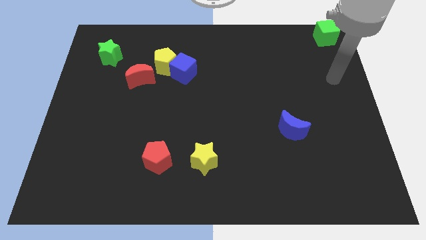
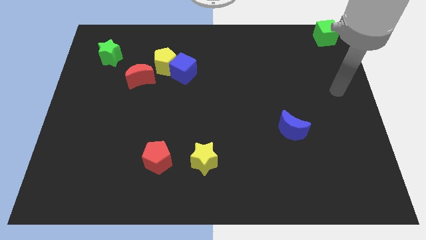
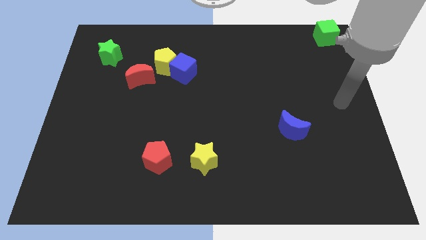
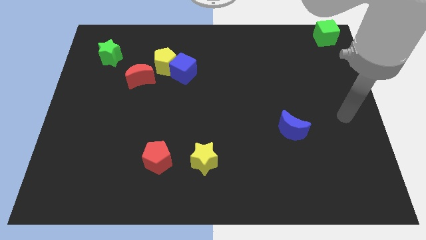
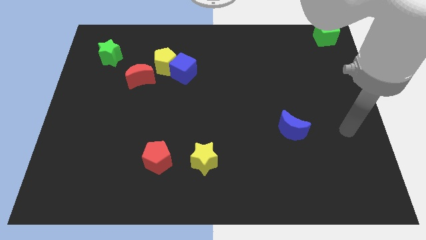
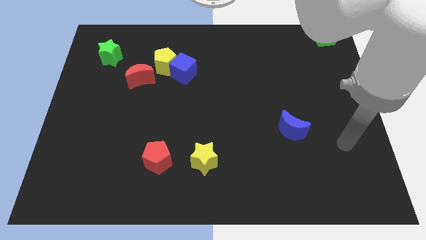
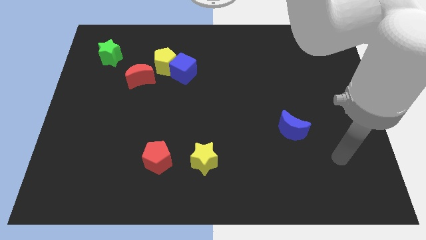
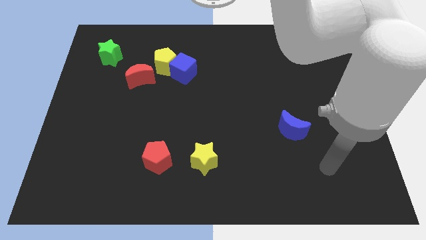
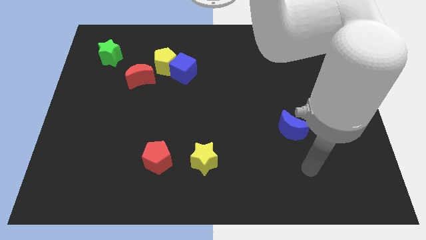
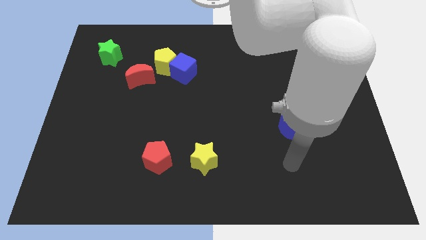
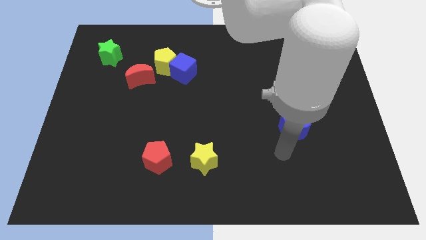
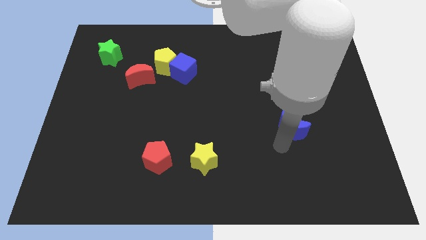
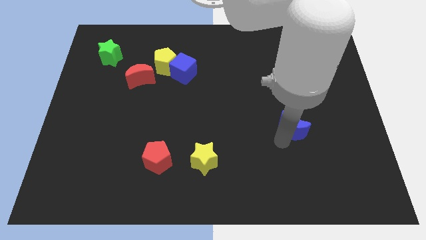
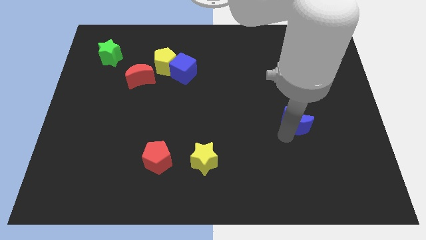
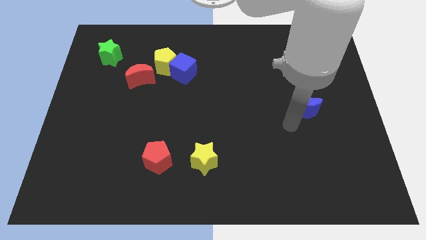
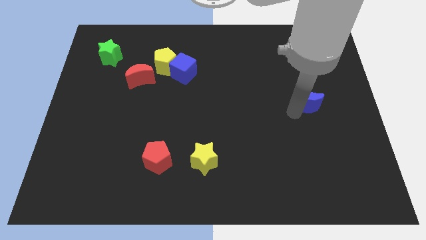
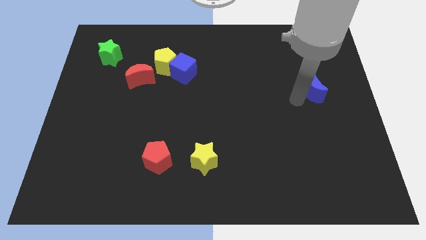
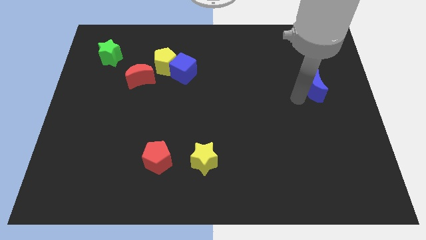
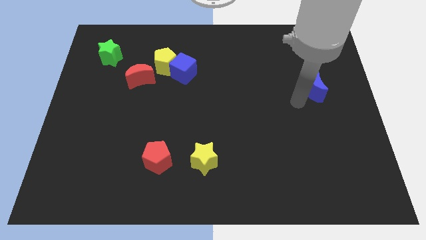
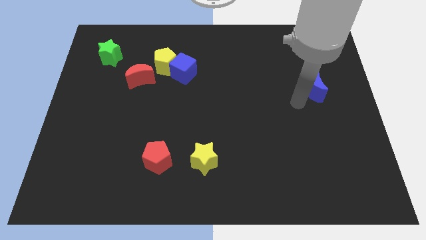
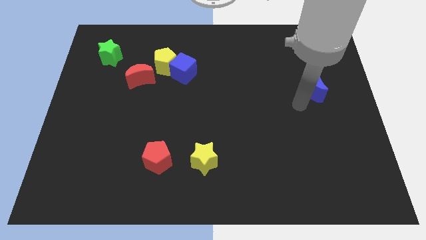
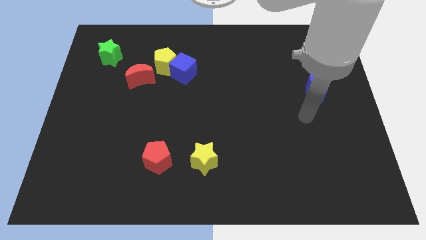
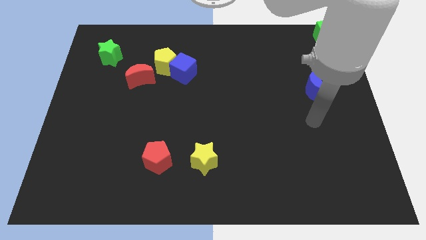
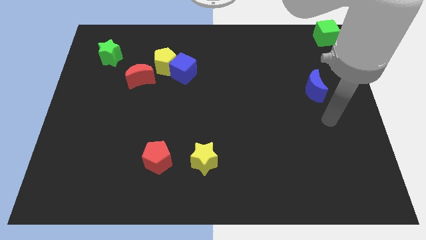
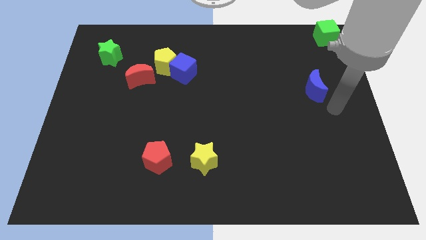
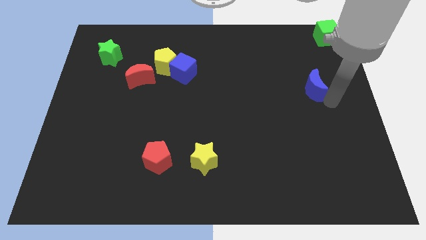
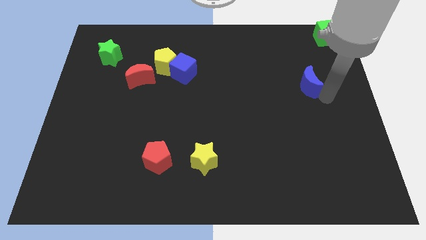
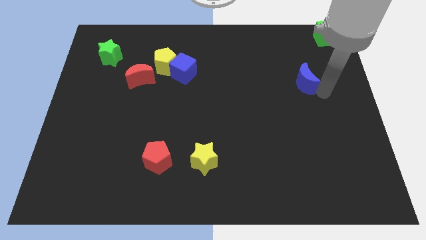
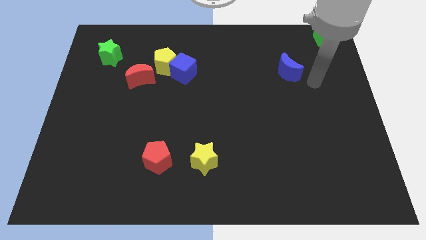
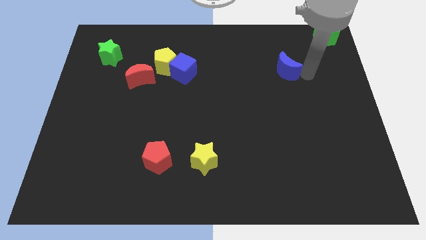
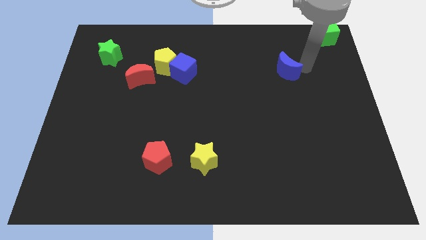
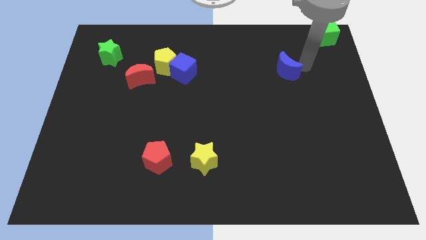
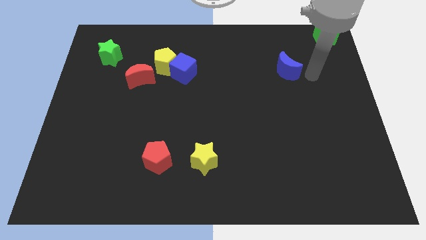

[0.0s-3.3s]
move the blue crescent diagonally on the bottom left side of the green cube

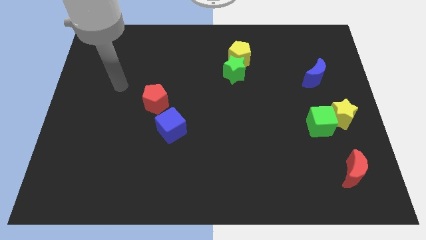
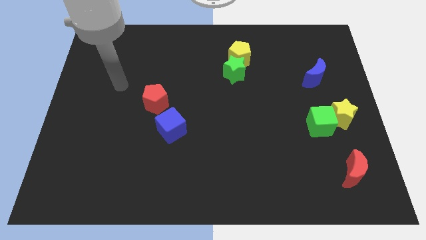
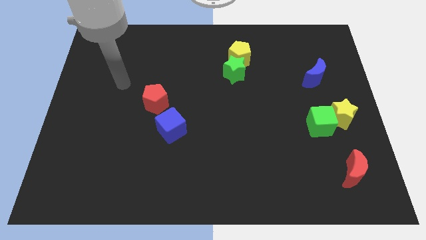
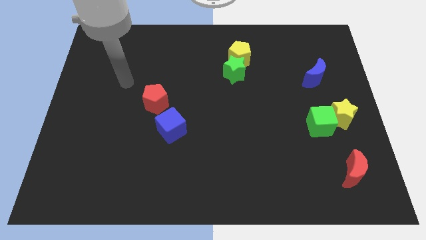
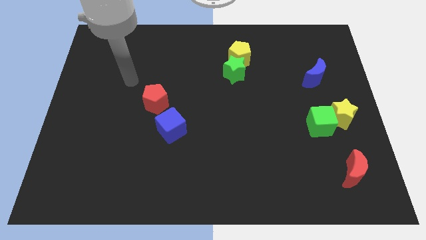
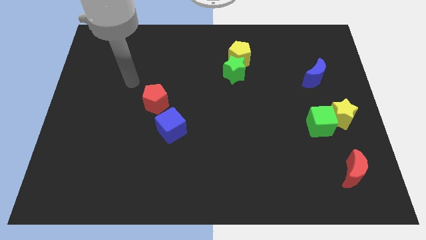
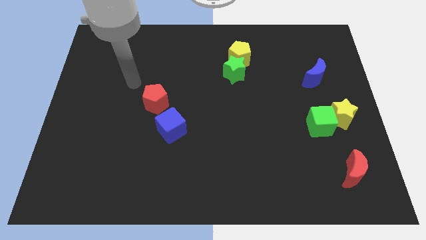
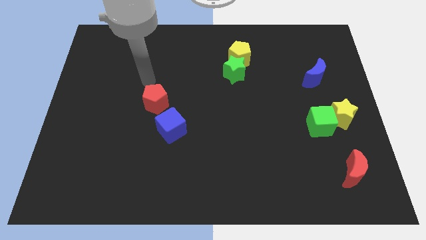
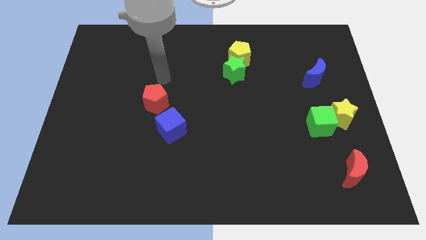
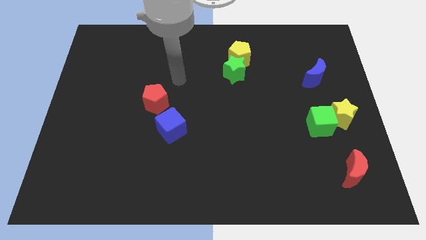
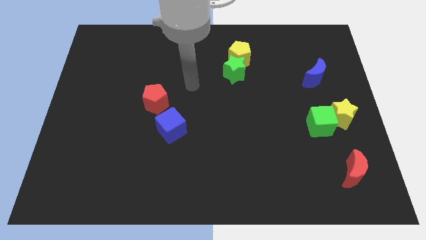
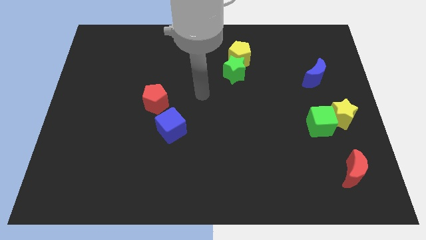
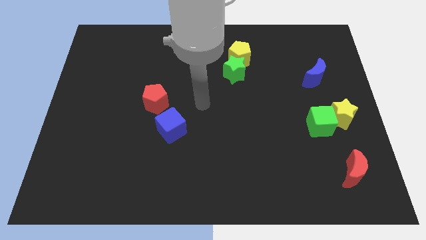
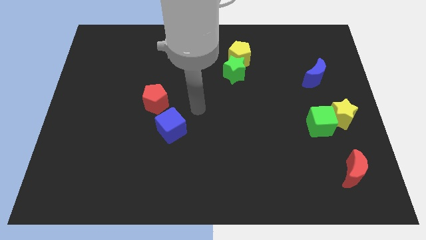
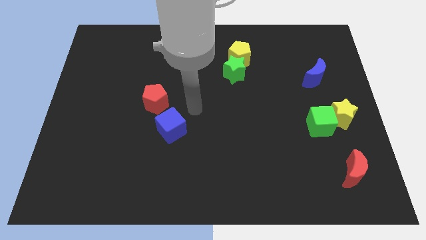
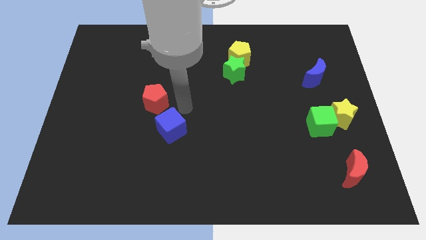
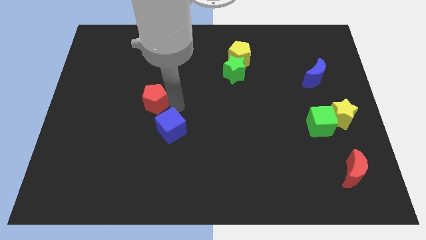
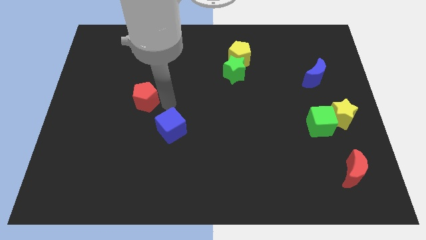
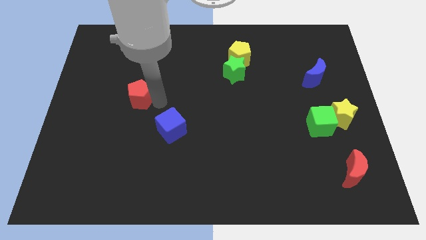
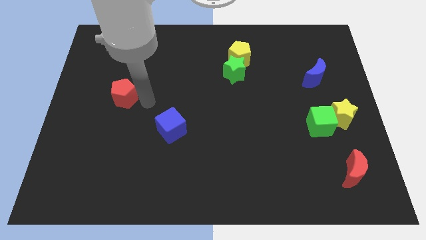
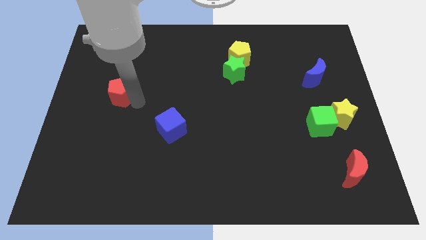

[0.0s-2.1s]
push the red pentagon to the left center

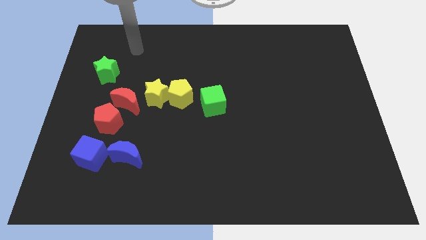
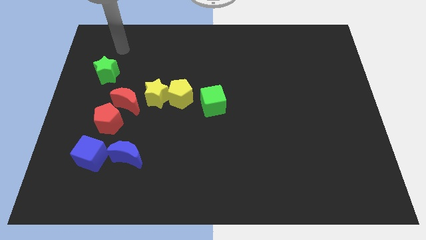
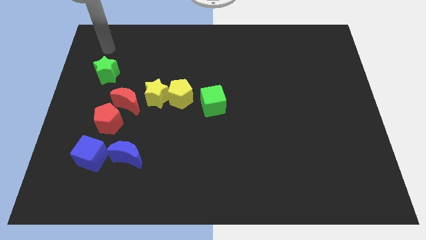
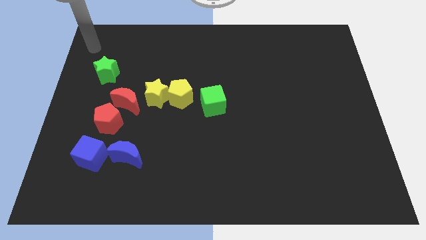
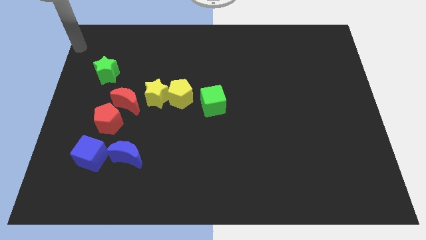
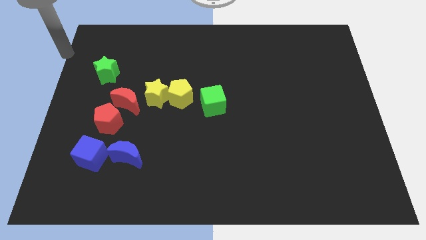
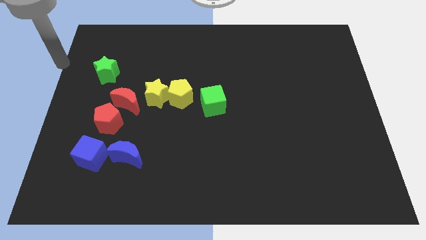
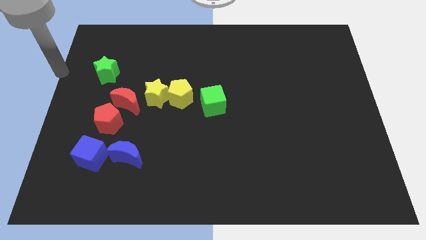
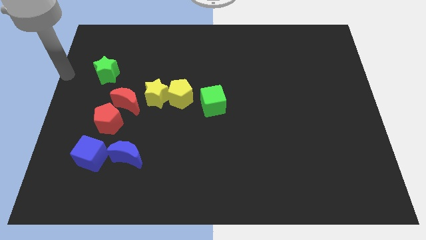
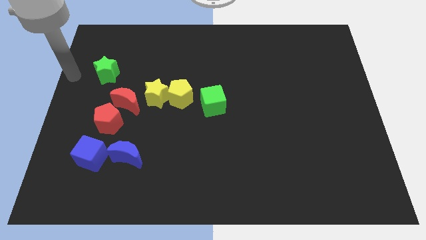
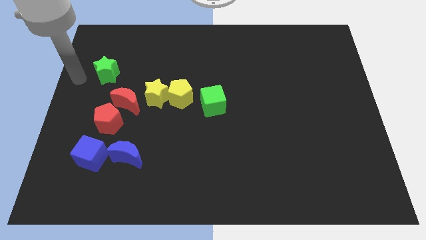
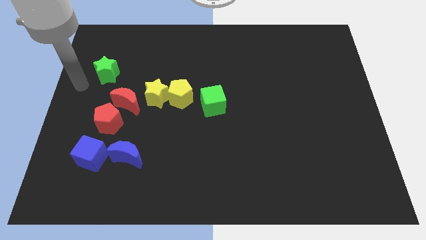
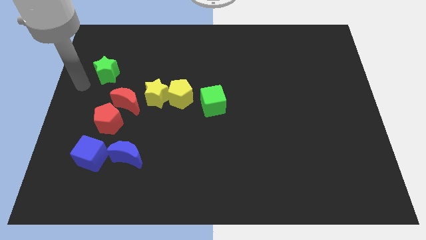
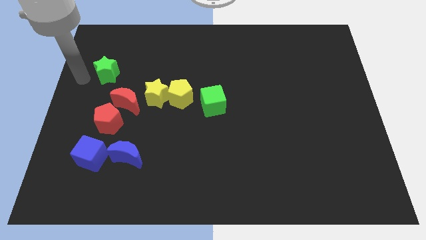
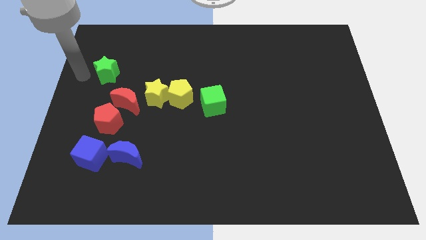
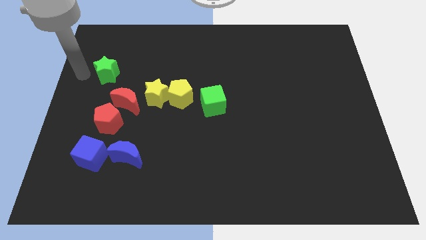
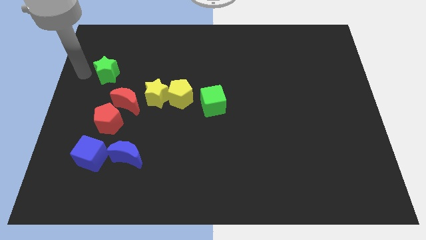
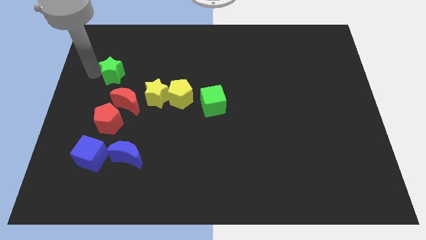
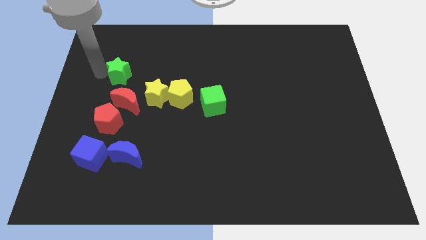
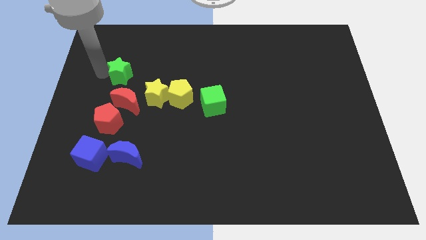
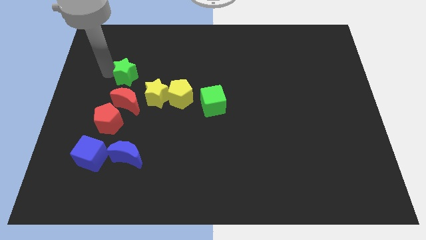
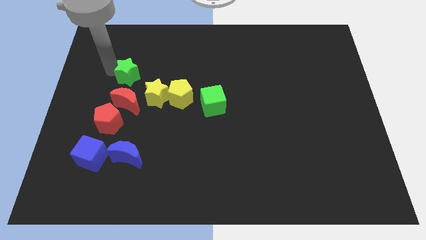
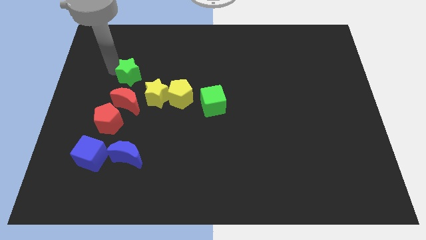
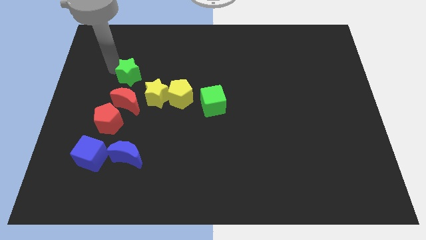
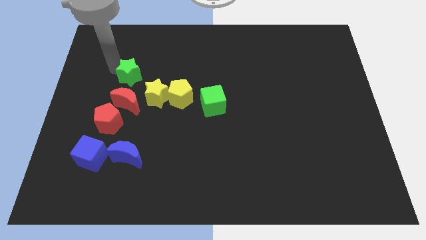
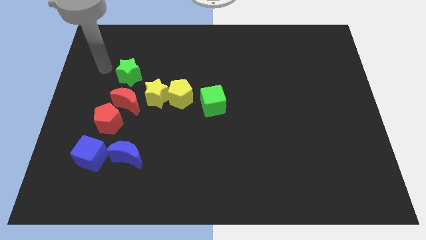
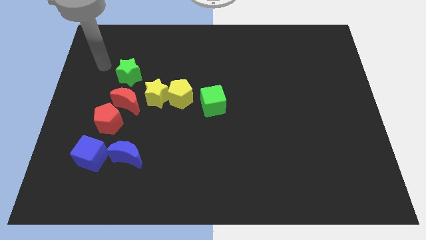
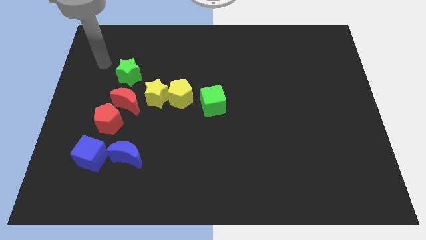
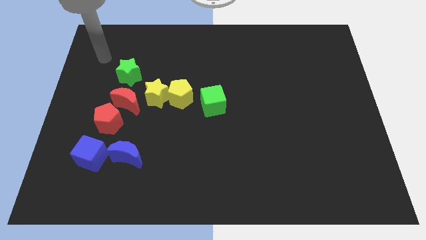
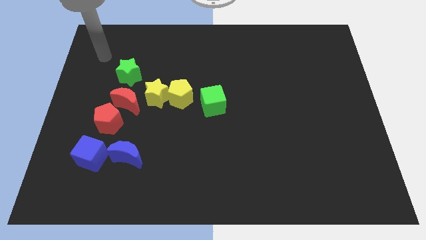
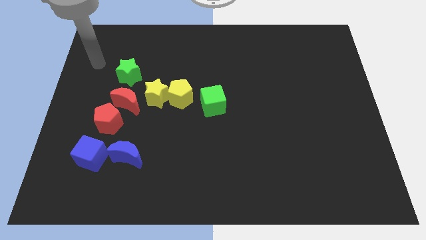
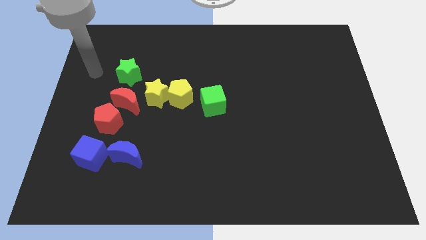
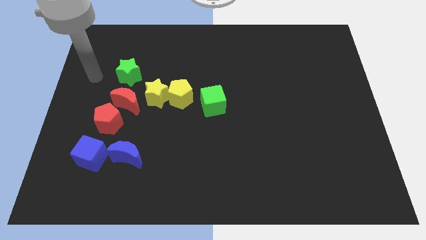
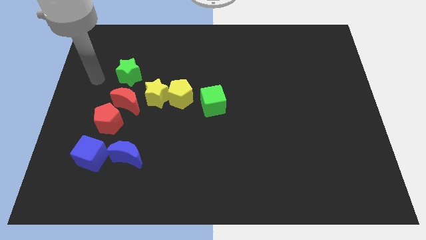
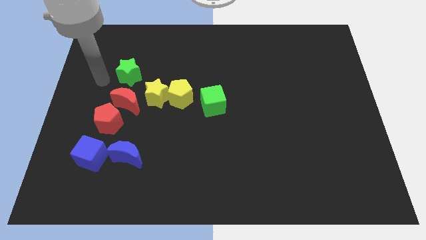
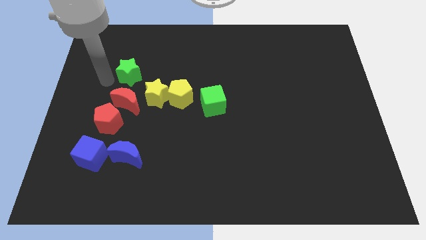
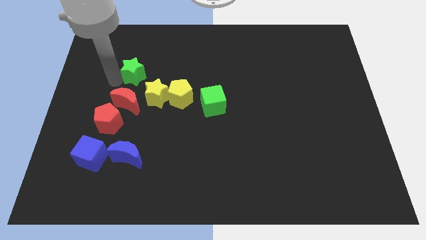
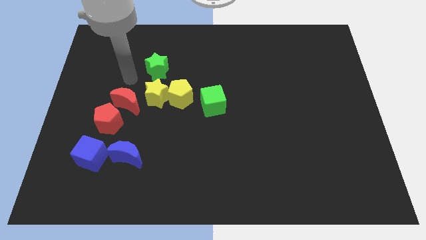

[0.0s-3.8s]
move the green star to the top of the yellow star
